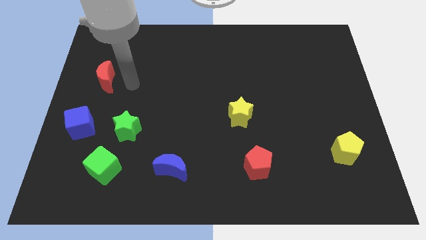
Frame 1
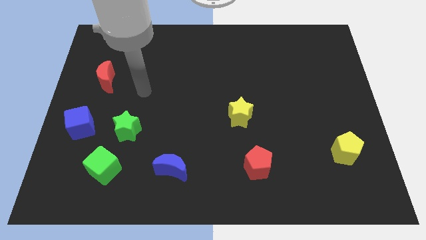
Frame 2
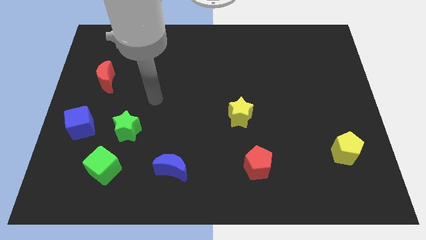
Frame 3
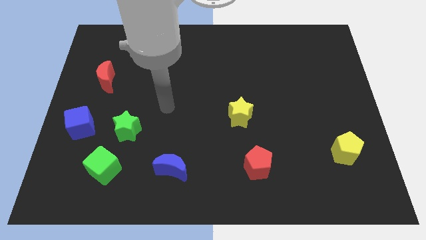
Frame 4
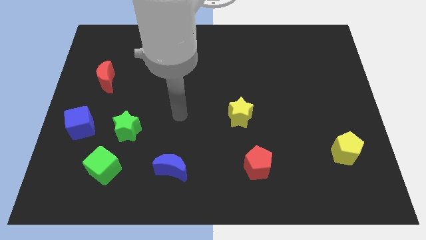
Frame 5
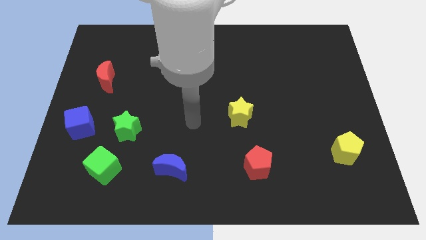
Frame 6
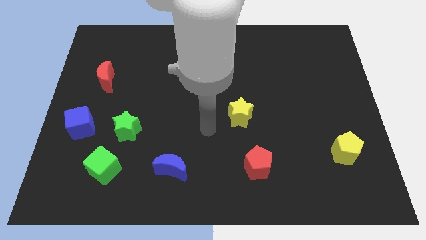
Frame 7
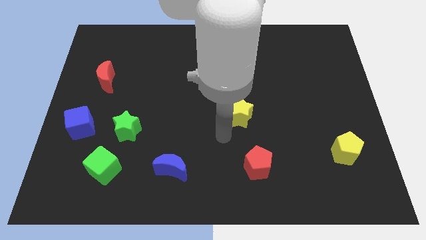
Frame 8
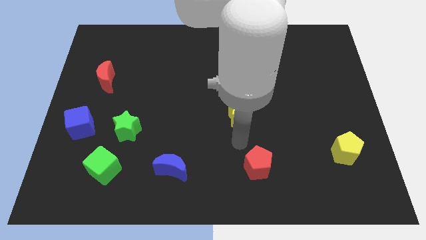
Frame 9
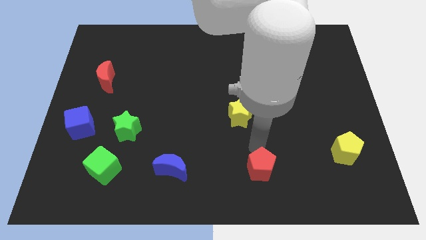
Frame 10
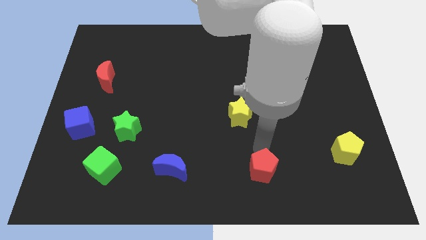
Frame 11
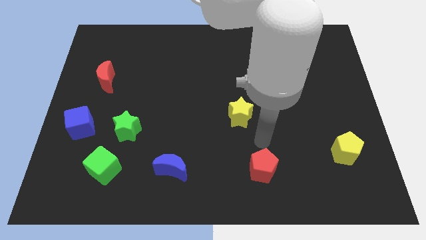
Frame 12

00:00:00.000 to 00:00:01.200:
touch the red pentagon

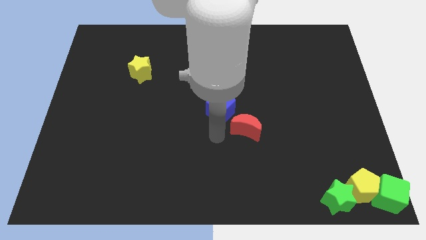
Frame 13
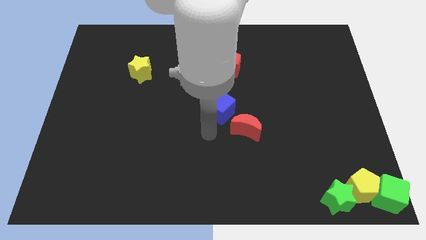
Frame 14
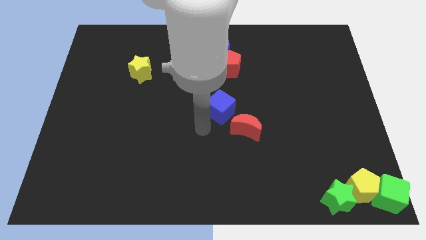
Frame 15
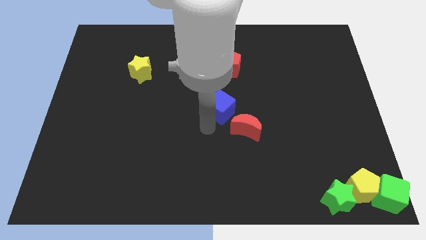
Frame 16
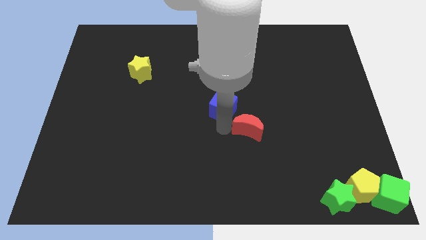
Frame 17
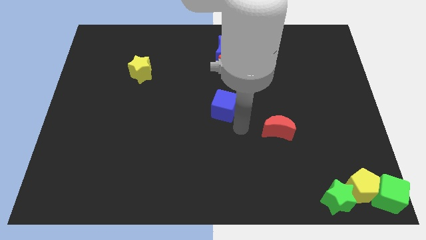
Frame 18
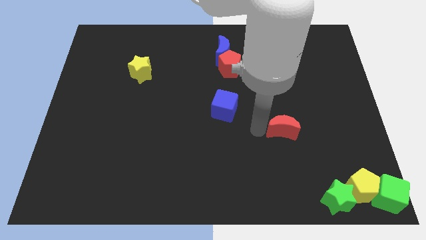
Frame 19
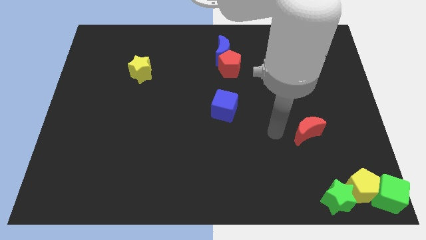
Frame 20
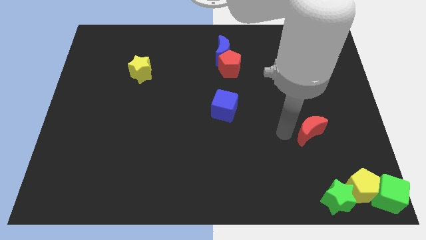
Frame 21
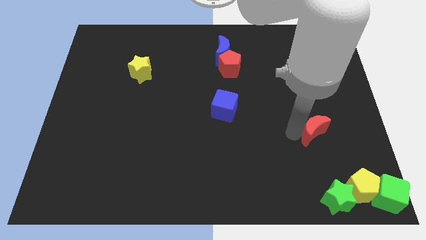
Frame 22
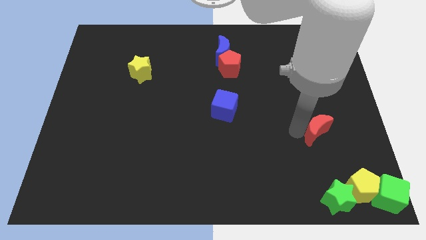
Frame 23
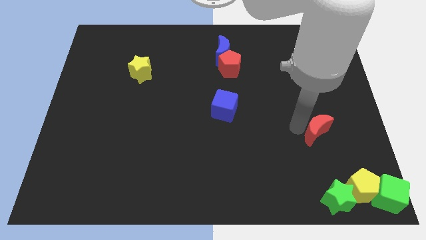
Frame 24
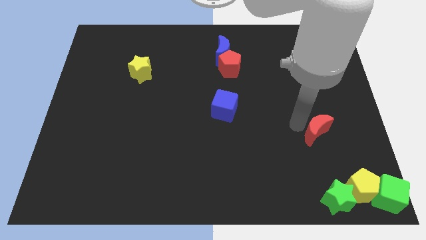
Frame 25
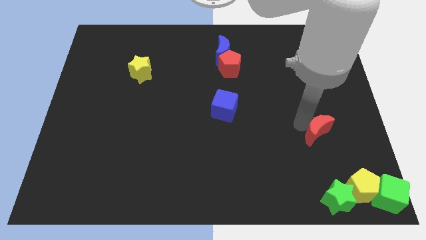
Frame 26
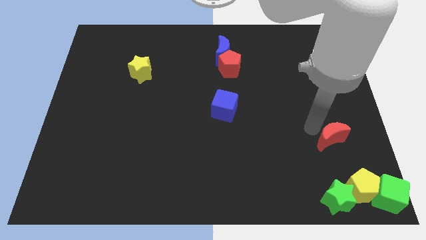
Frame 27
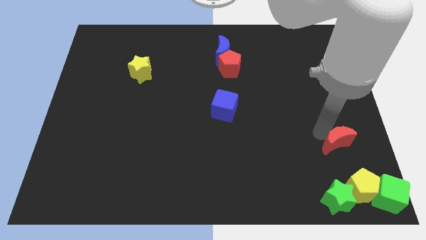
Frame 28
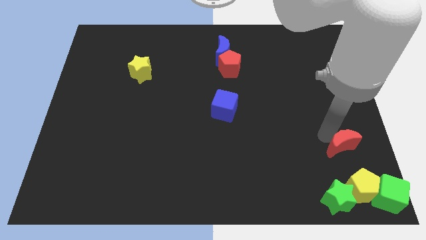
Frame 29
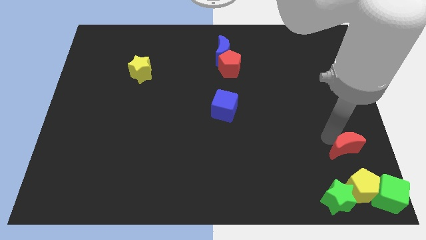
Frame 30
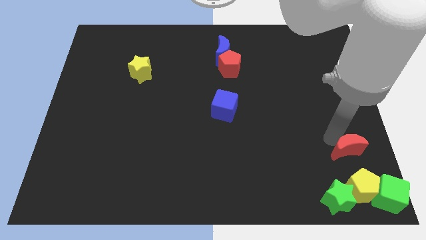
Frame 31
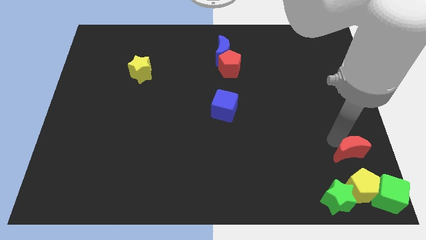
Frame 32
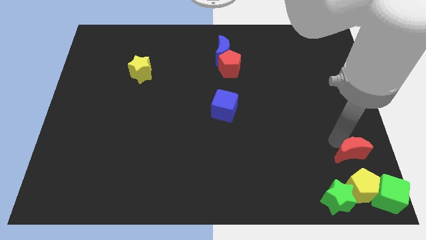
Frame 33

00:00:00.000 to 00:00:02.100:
place the red moon above the yellow pentagon

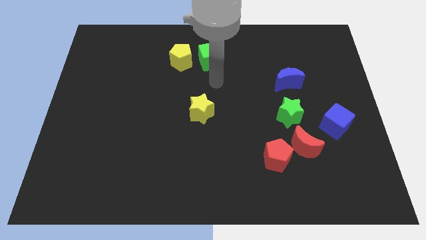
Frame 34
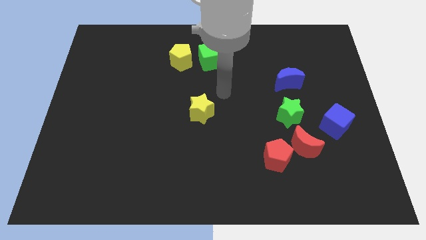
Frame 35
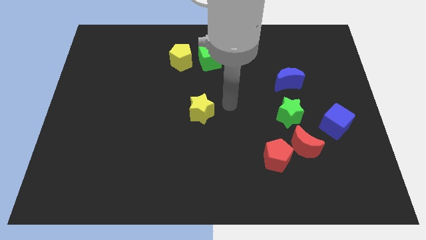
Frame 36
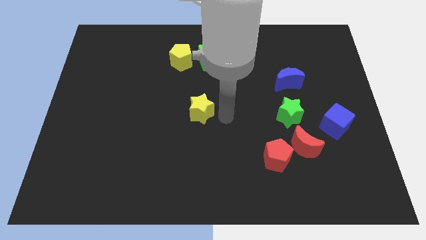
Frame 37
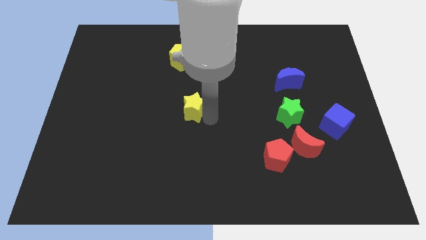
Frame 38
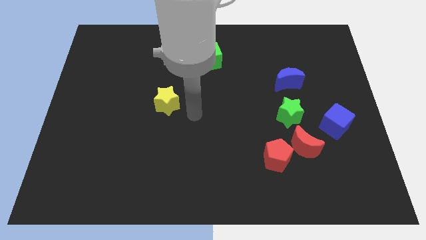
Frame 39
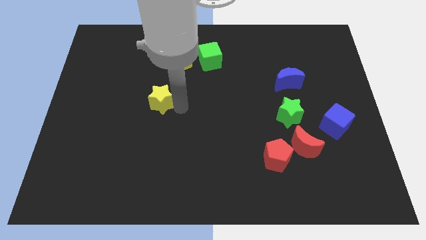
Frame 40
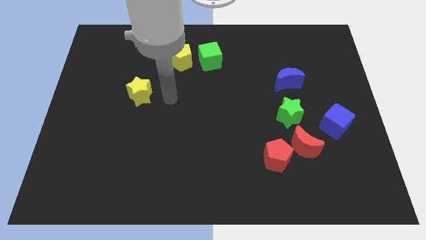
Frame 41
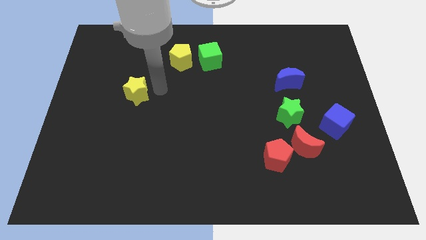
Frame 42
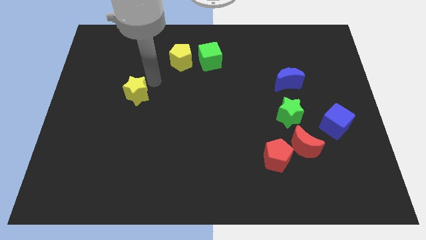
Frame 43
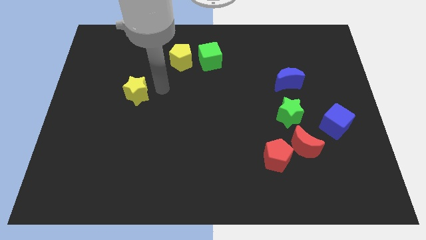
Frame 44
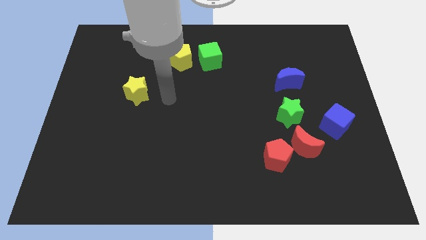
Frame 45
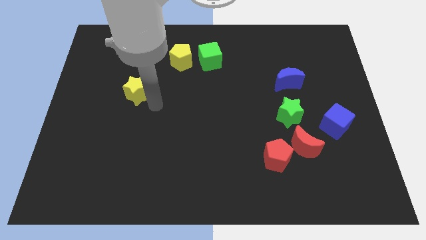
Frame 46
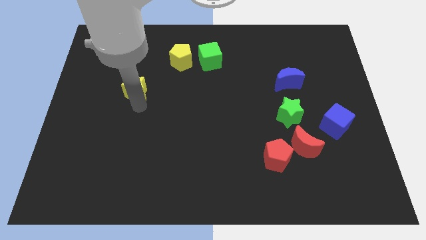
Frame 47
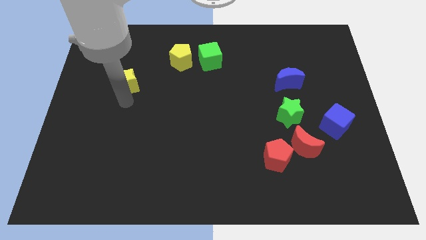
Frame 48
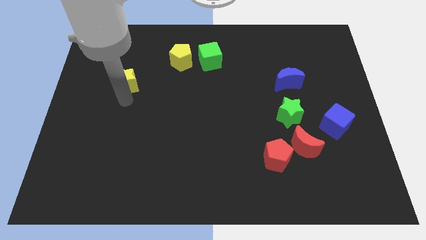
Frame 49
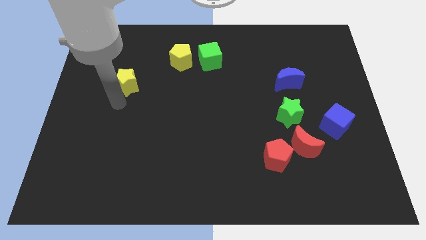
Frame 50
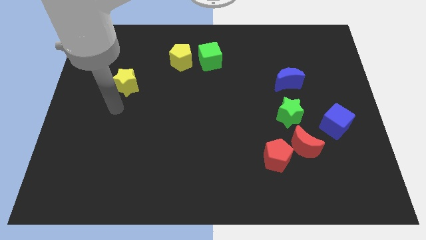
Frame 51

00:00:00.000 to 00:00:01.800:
push the yellow star towards the left of the board

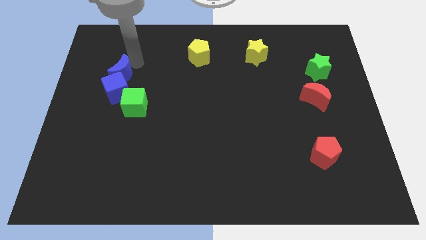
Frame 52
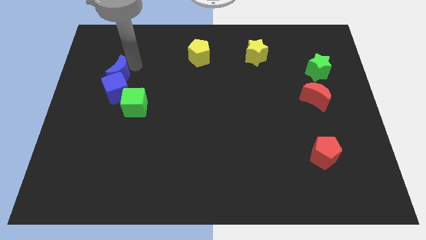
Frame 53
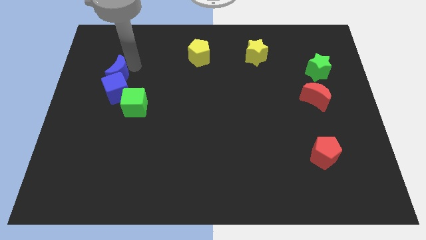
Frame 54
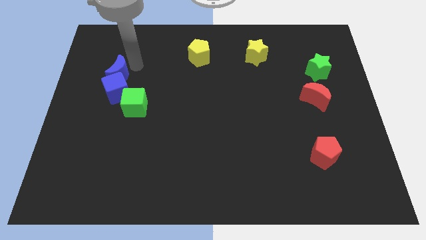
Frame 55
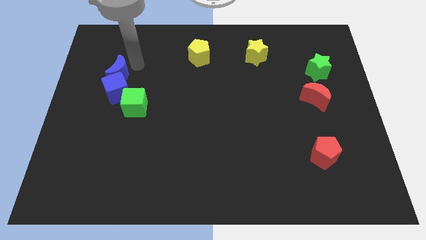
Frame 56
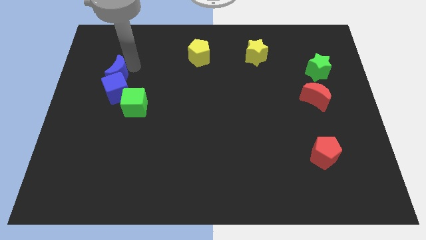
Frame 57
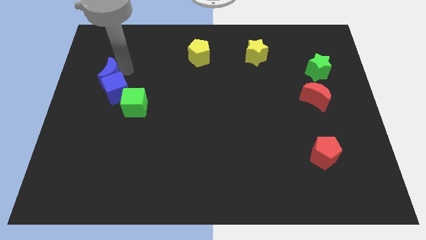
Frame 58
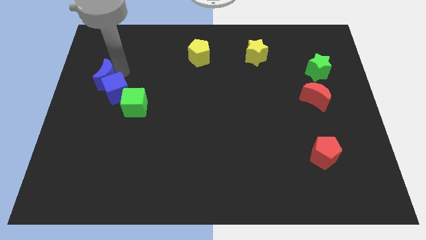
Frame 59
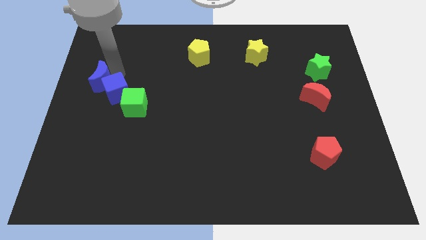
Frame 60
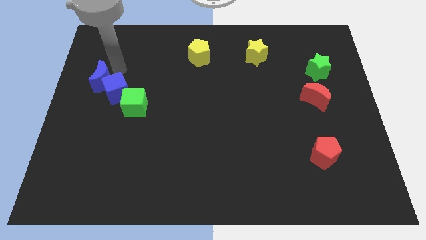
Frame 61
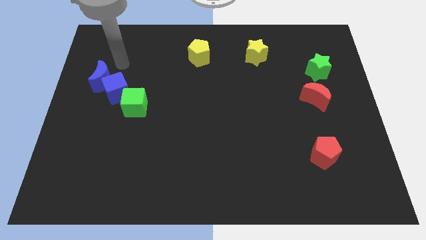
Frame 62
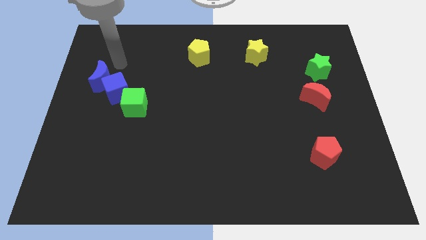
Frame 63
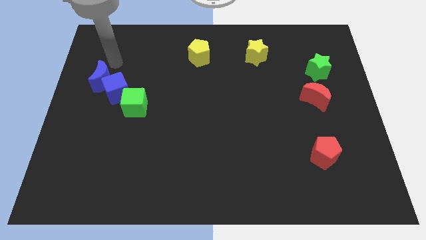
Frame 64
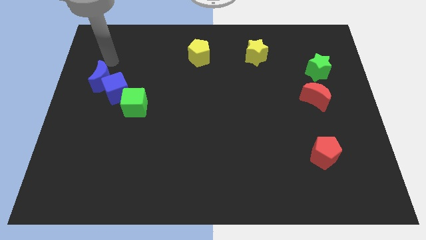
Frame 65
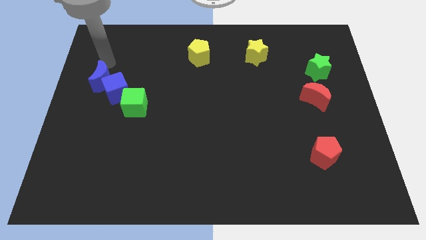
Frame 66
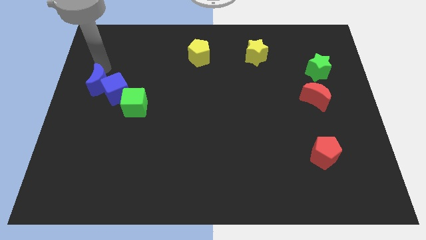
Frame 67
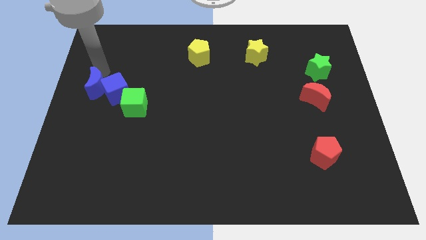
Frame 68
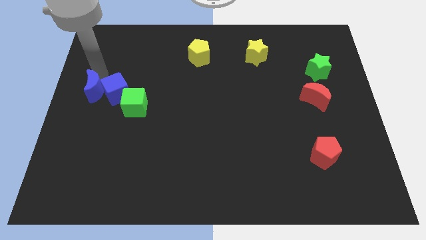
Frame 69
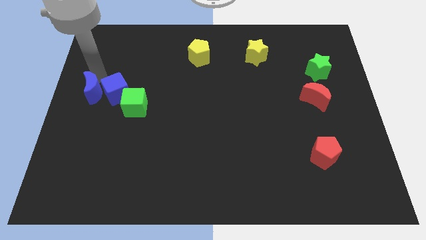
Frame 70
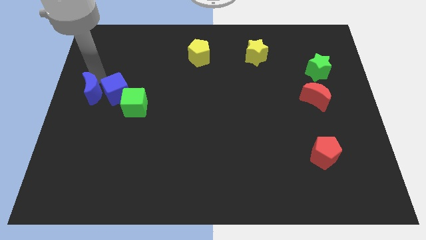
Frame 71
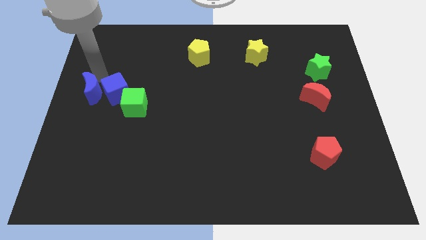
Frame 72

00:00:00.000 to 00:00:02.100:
move the blue crescent to the left of the blue cube

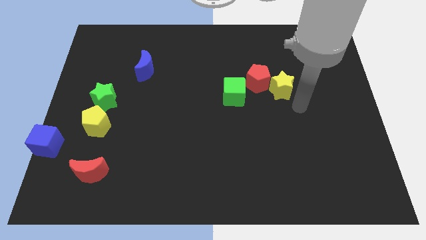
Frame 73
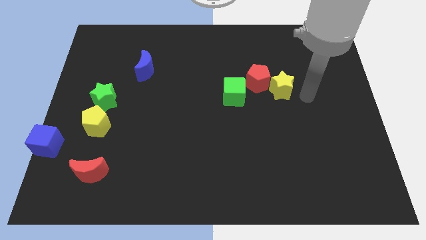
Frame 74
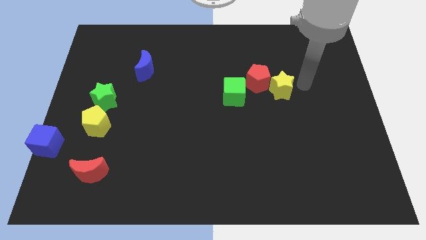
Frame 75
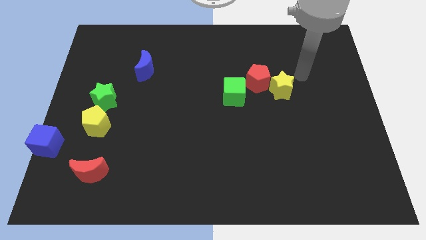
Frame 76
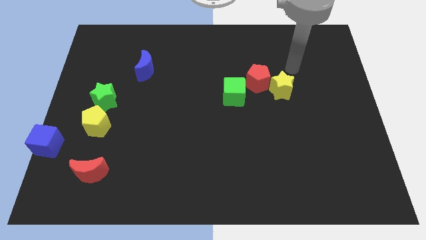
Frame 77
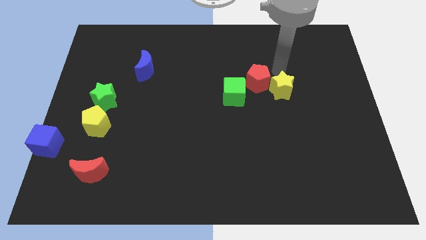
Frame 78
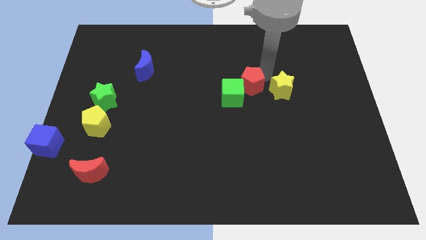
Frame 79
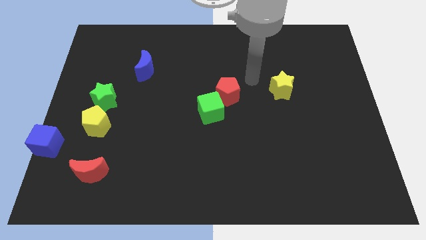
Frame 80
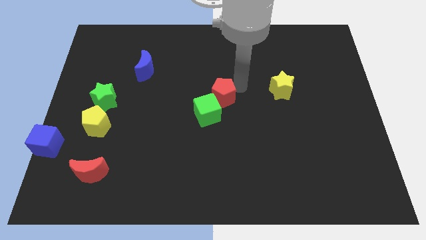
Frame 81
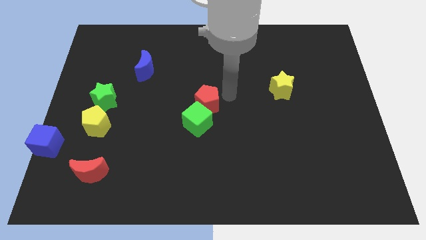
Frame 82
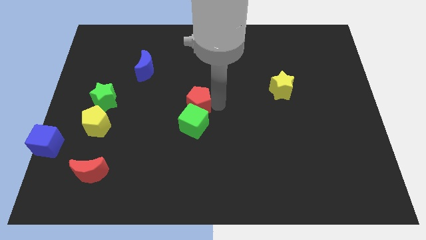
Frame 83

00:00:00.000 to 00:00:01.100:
move the red pentagon and the green cube to the center

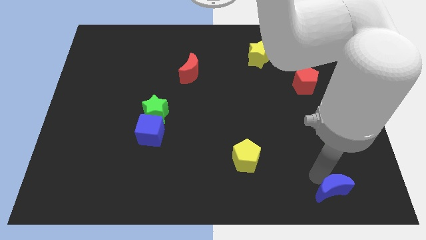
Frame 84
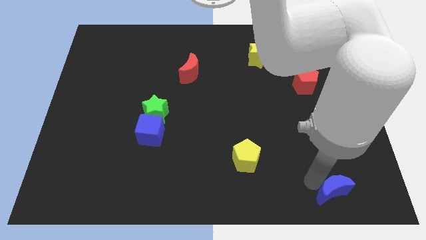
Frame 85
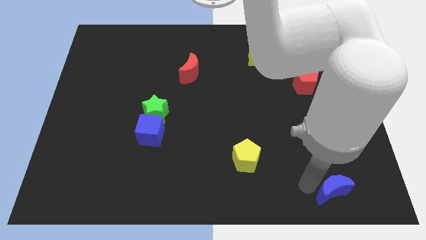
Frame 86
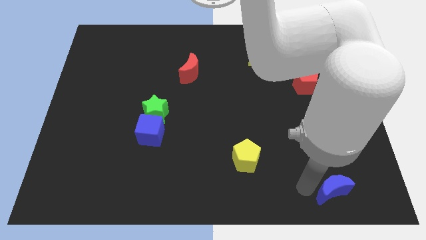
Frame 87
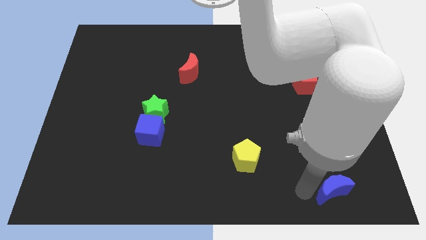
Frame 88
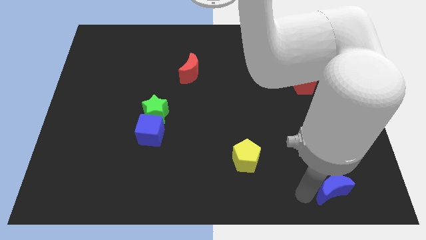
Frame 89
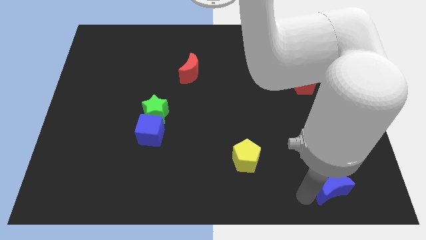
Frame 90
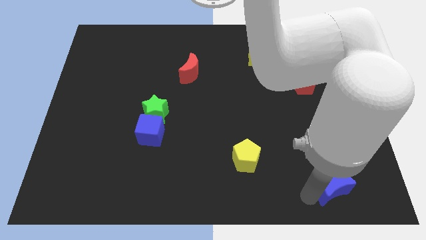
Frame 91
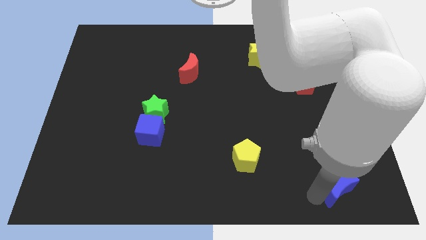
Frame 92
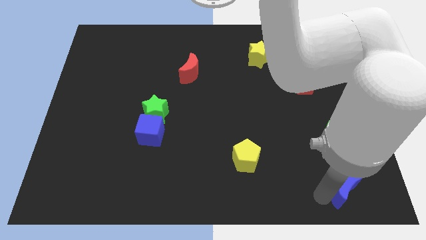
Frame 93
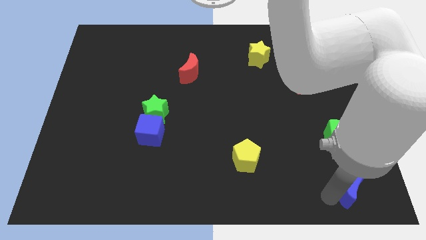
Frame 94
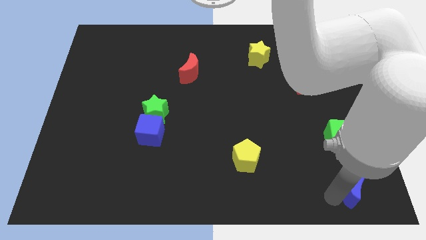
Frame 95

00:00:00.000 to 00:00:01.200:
move the blue moon slightly right
